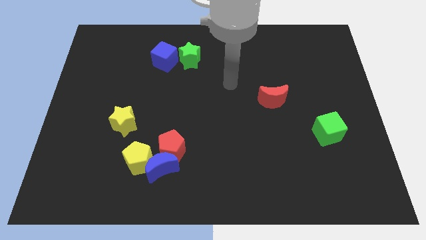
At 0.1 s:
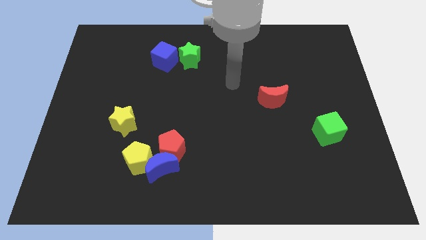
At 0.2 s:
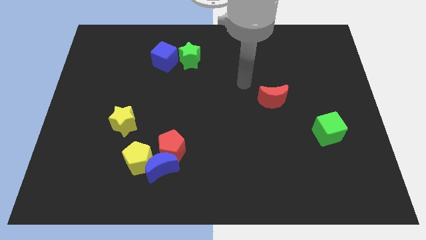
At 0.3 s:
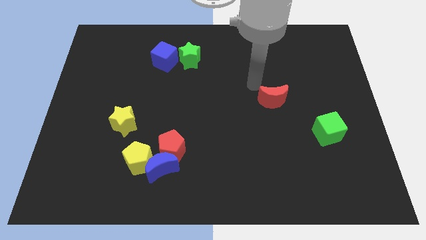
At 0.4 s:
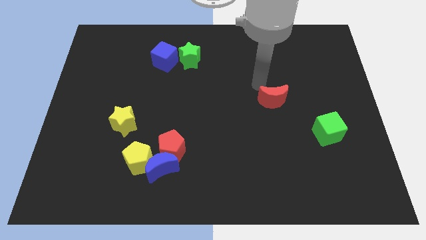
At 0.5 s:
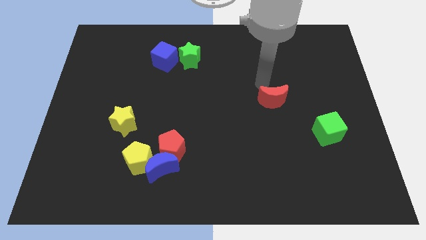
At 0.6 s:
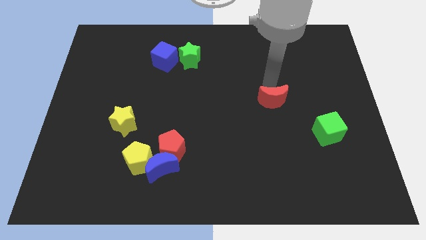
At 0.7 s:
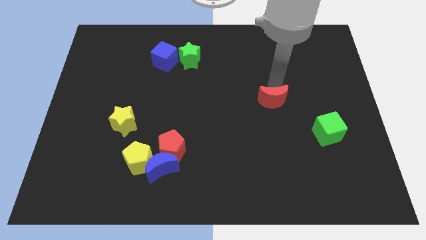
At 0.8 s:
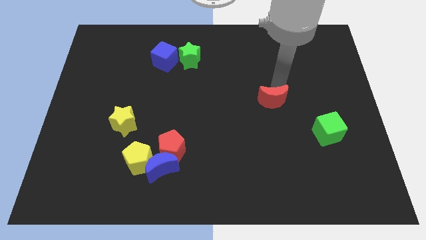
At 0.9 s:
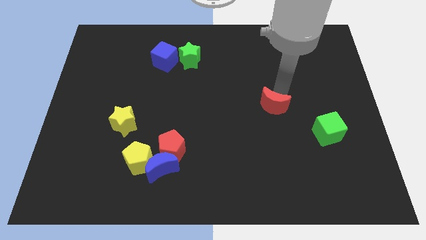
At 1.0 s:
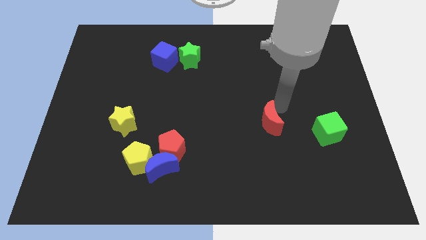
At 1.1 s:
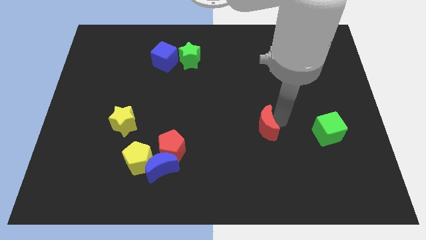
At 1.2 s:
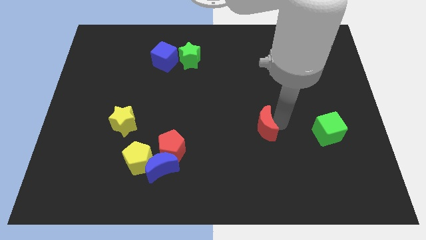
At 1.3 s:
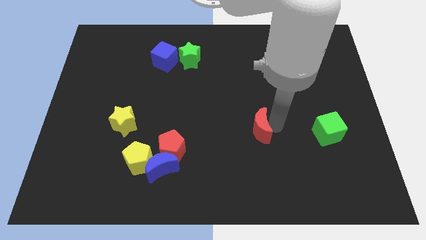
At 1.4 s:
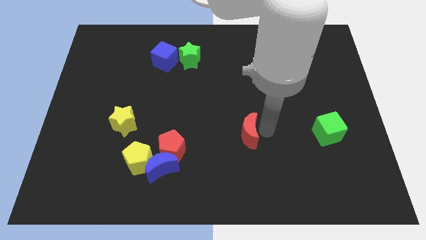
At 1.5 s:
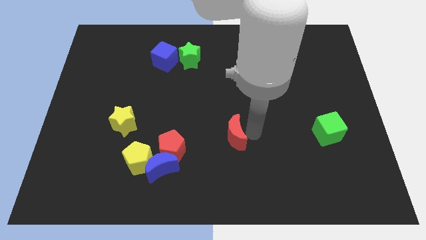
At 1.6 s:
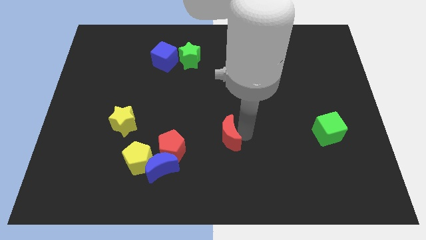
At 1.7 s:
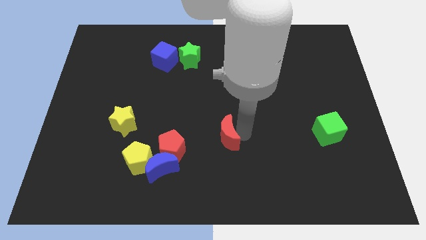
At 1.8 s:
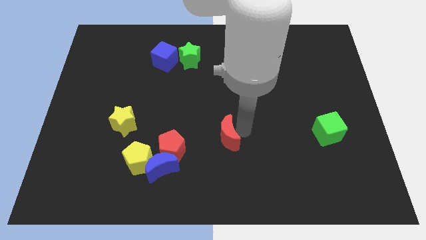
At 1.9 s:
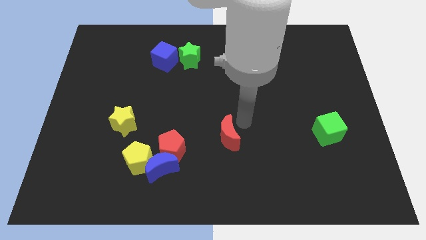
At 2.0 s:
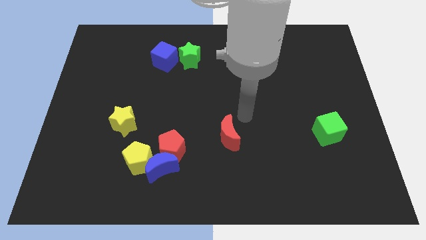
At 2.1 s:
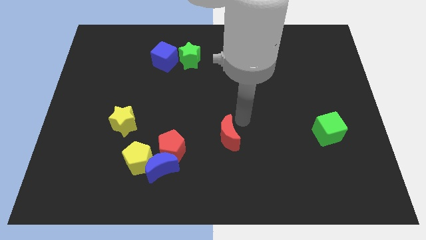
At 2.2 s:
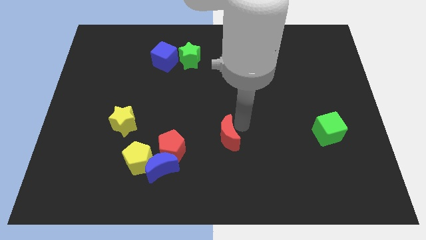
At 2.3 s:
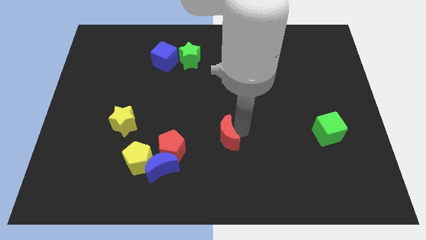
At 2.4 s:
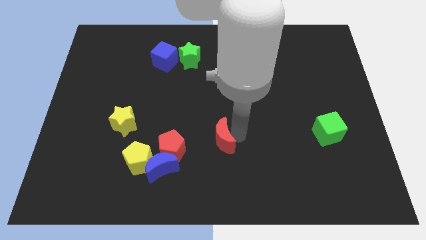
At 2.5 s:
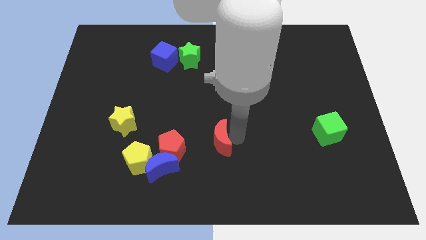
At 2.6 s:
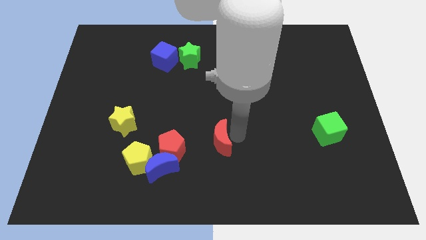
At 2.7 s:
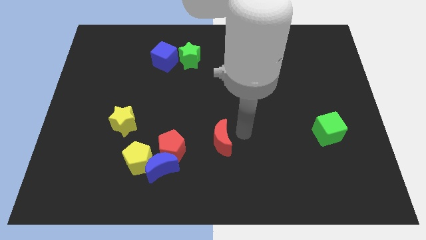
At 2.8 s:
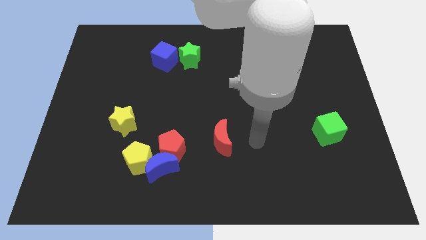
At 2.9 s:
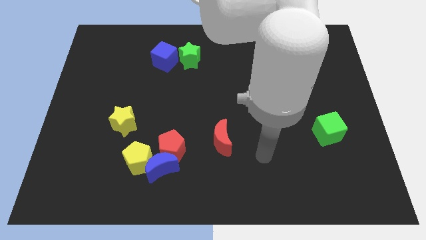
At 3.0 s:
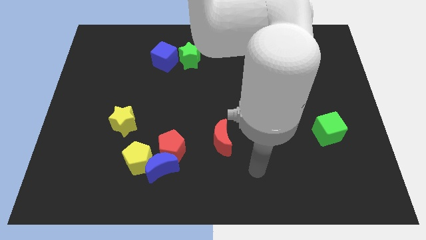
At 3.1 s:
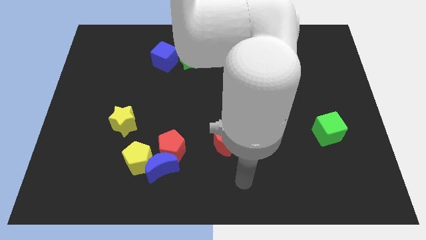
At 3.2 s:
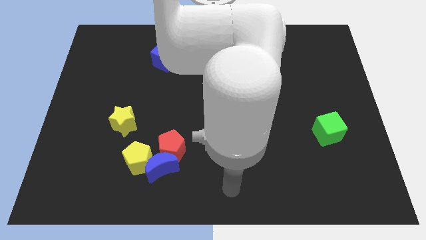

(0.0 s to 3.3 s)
push red moon towards bottom of the board

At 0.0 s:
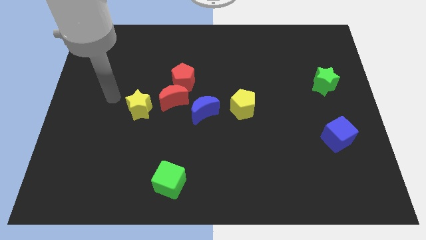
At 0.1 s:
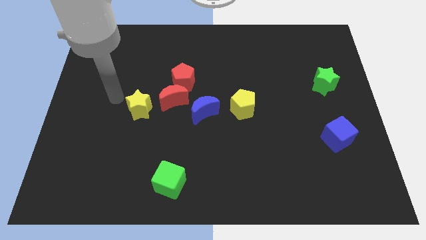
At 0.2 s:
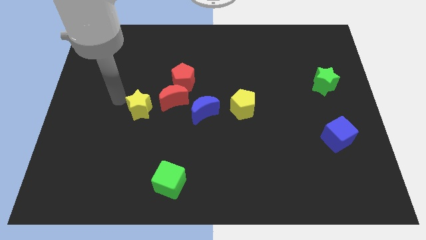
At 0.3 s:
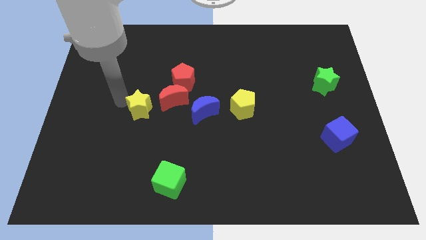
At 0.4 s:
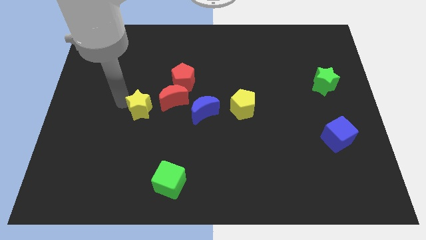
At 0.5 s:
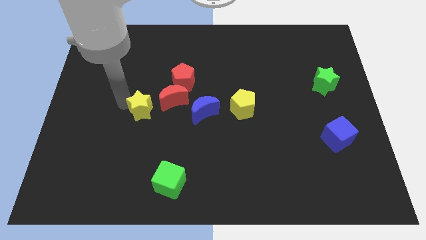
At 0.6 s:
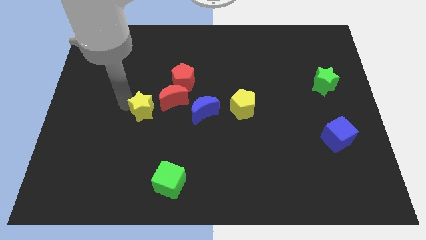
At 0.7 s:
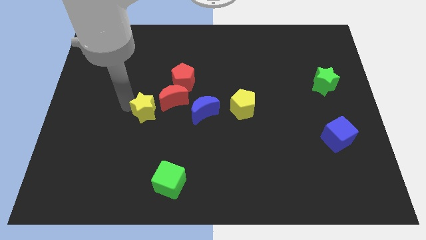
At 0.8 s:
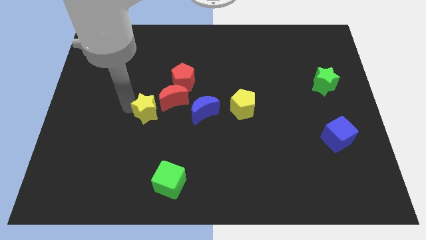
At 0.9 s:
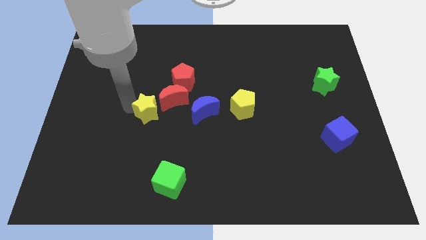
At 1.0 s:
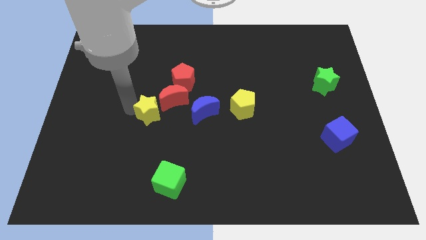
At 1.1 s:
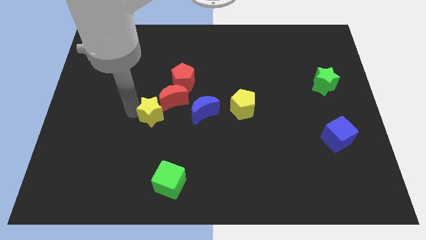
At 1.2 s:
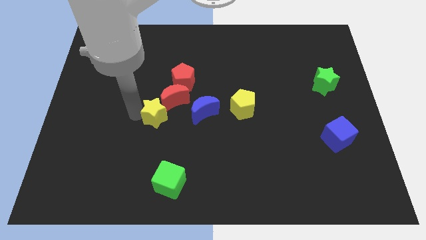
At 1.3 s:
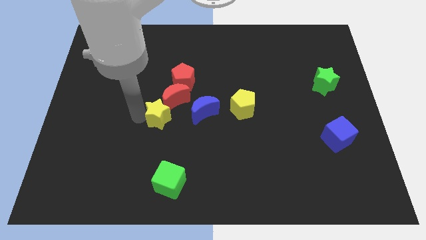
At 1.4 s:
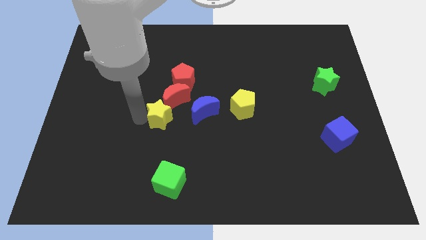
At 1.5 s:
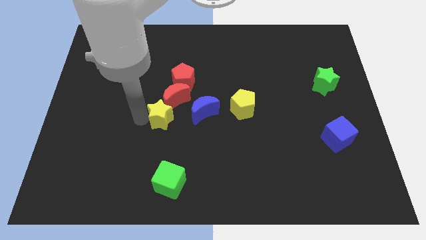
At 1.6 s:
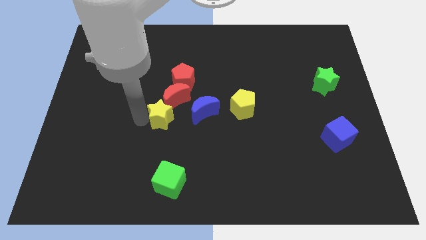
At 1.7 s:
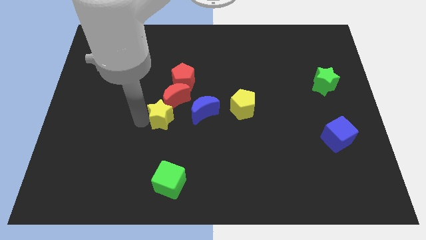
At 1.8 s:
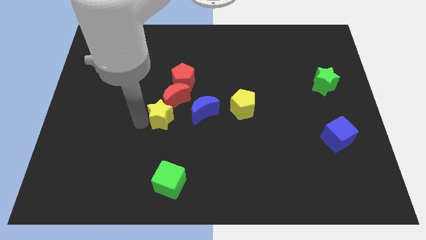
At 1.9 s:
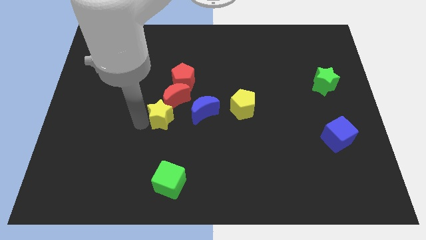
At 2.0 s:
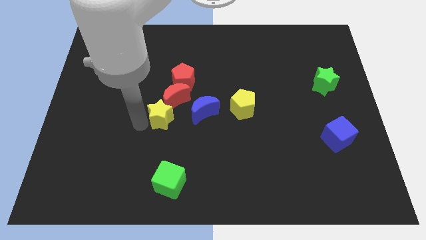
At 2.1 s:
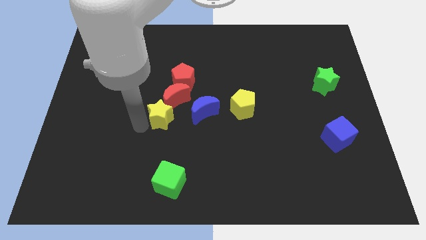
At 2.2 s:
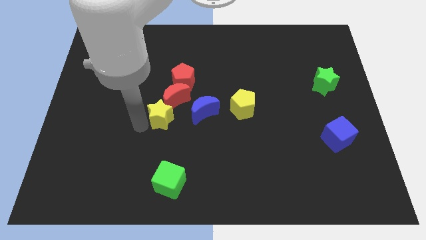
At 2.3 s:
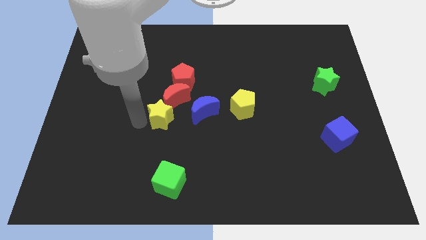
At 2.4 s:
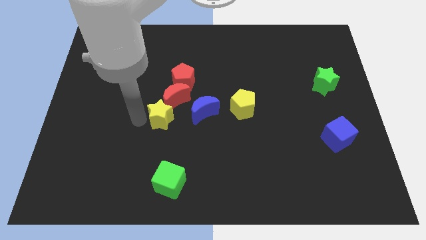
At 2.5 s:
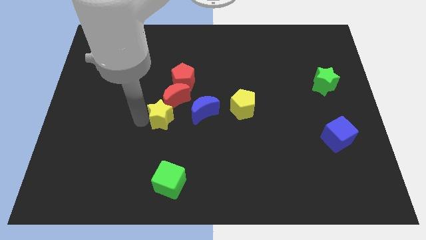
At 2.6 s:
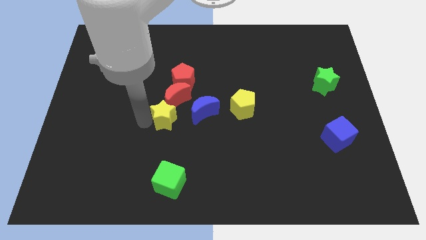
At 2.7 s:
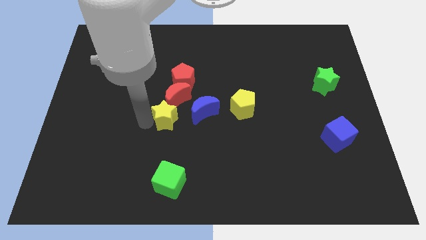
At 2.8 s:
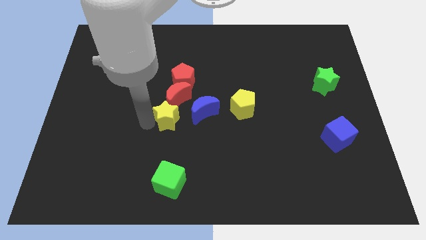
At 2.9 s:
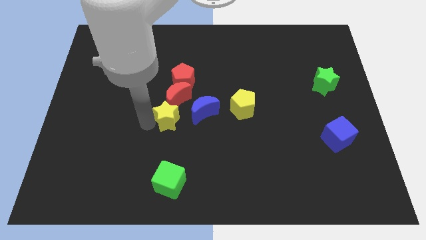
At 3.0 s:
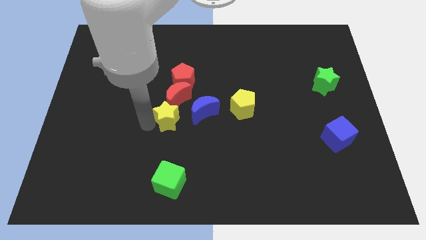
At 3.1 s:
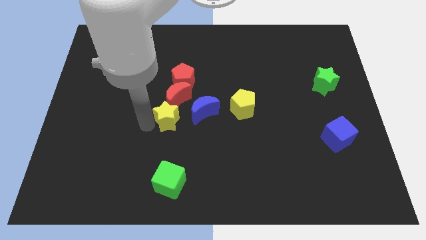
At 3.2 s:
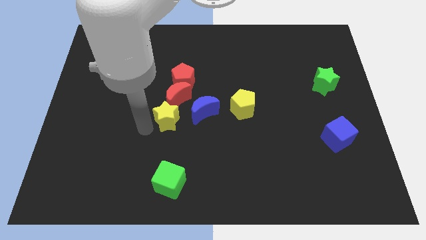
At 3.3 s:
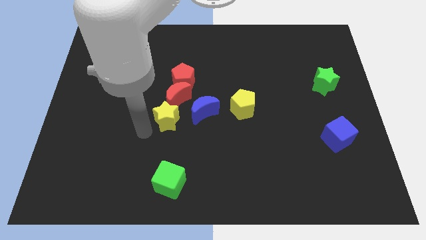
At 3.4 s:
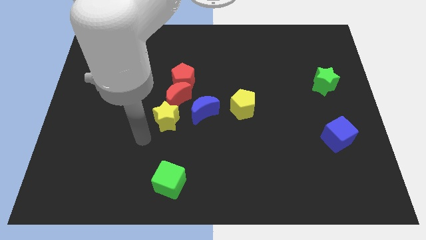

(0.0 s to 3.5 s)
slightly push the yellow star down to the red crescent

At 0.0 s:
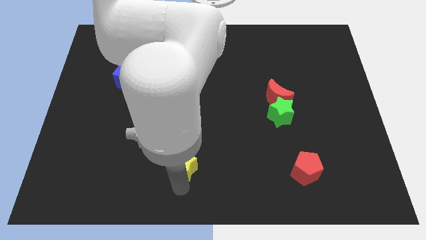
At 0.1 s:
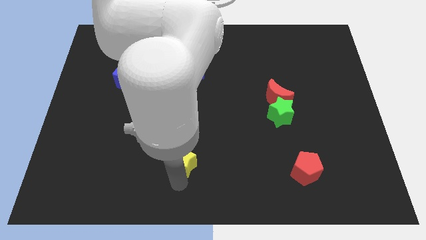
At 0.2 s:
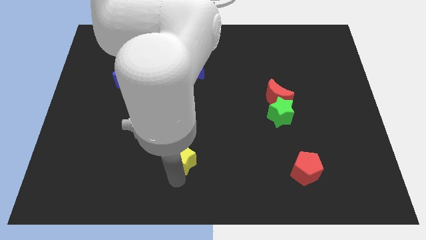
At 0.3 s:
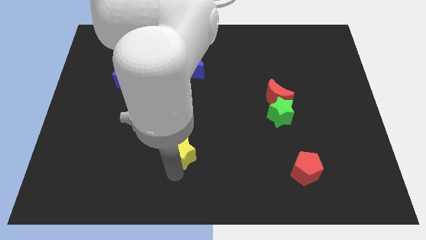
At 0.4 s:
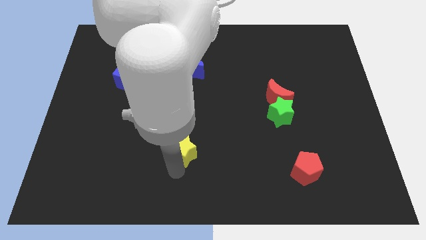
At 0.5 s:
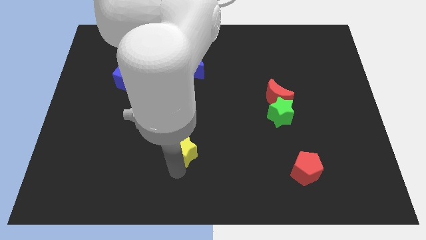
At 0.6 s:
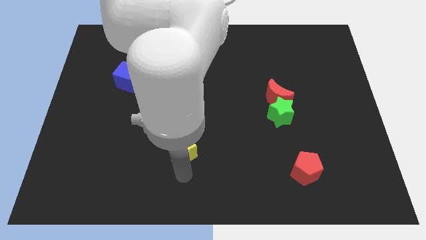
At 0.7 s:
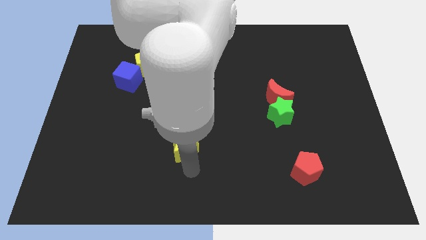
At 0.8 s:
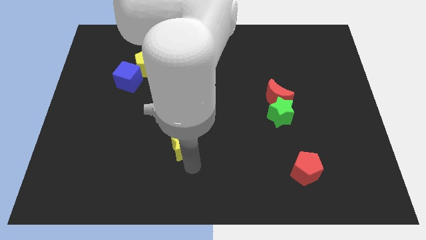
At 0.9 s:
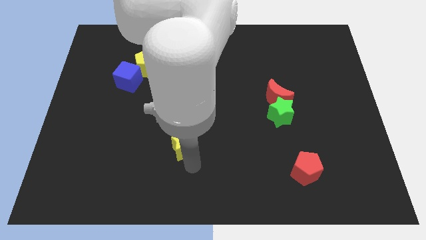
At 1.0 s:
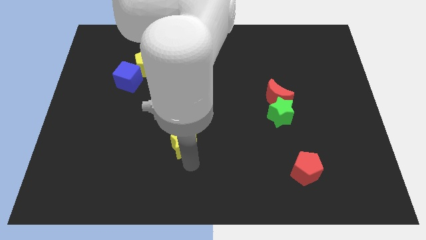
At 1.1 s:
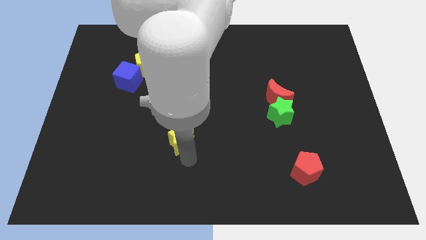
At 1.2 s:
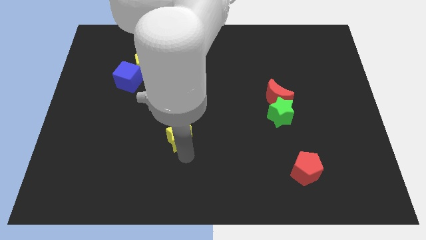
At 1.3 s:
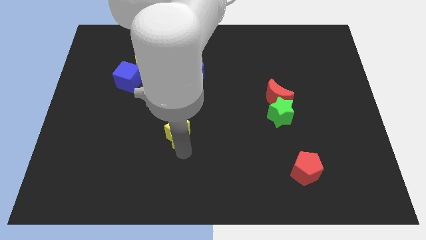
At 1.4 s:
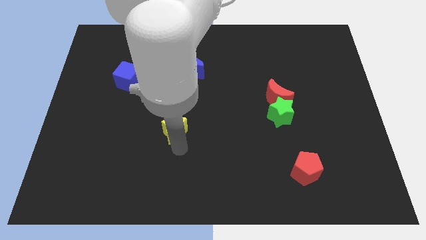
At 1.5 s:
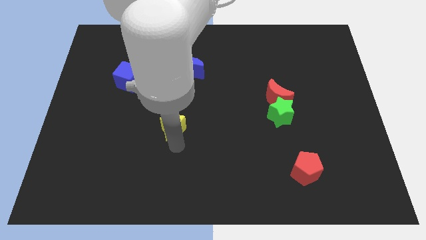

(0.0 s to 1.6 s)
move the yellow star slightly to the center of the board

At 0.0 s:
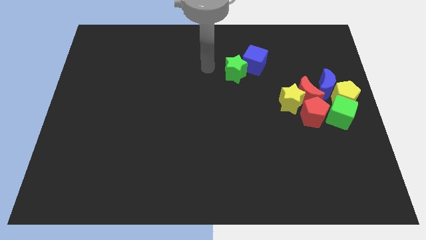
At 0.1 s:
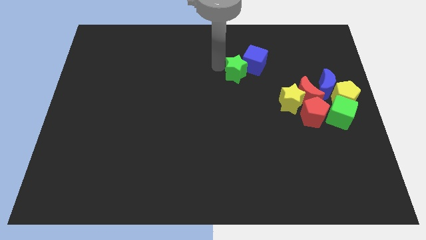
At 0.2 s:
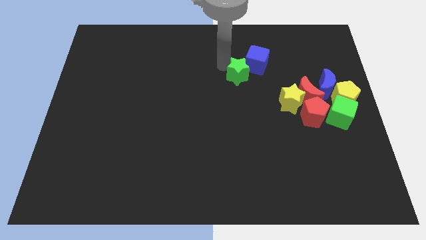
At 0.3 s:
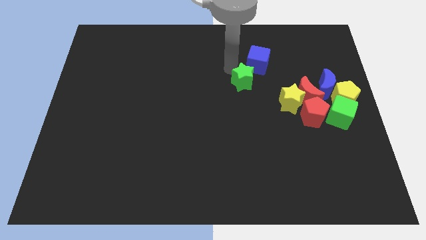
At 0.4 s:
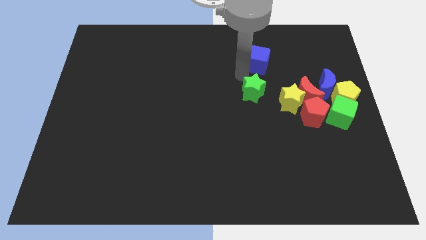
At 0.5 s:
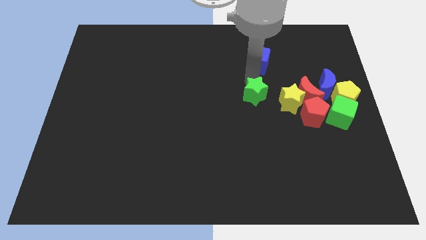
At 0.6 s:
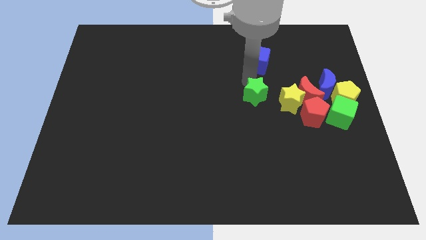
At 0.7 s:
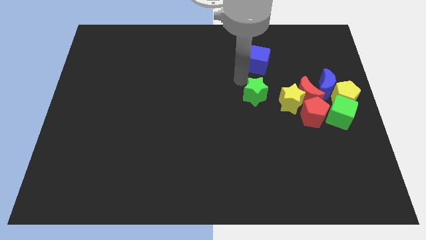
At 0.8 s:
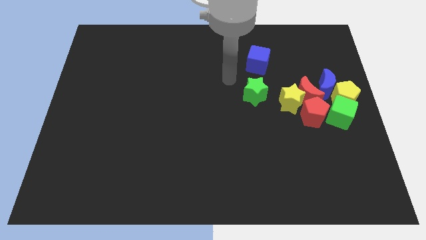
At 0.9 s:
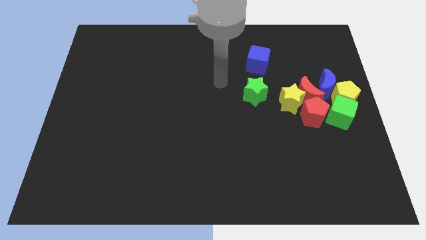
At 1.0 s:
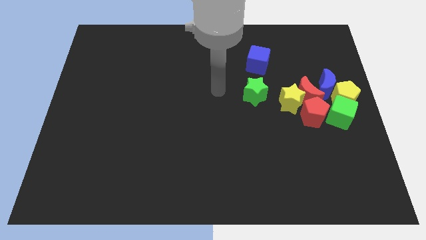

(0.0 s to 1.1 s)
place the green star to the left of the yellow star
